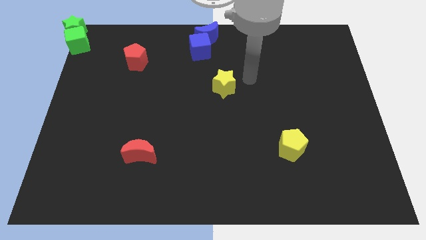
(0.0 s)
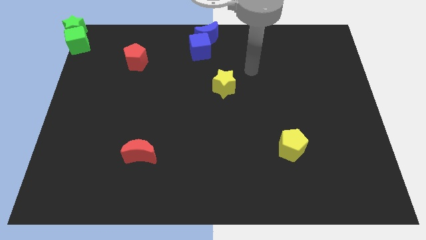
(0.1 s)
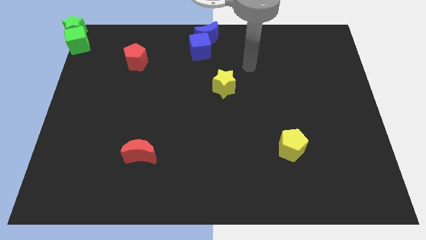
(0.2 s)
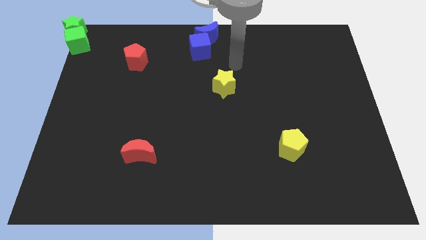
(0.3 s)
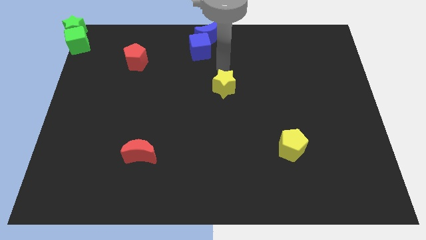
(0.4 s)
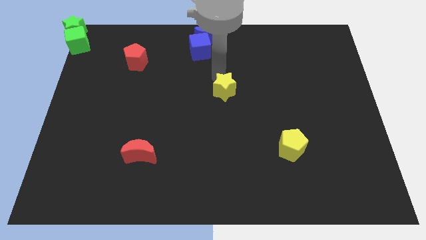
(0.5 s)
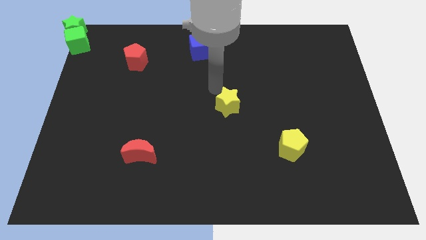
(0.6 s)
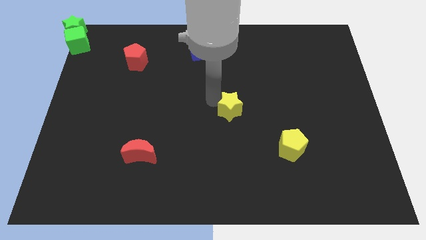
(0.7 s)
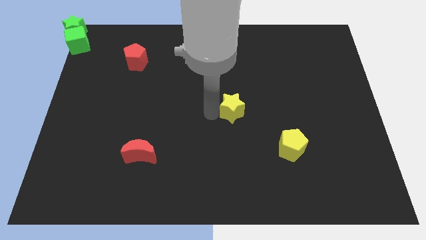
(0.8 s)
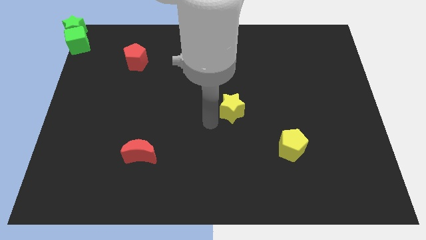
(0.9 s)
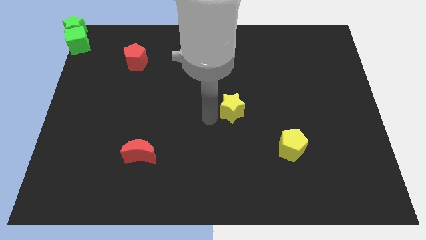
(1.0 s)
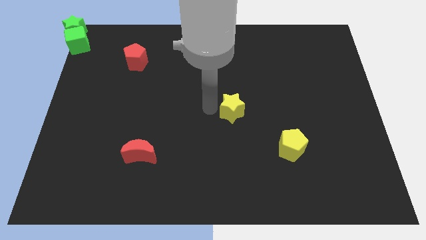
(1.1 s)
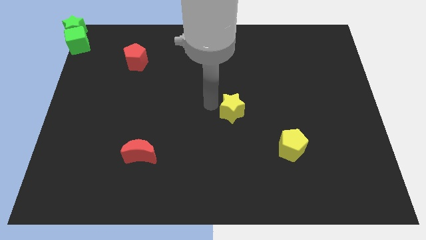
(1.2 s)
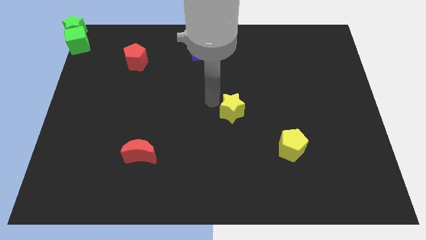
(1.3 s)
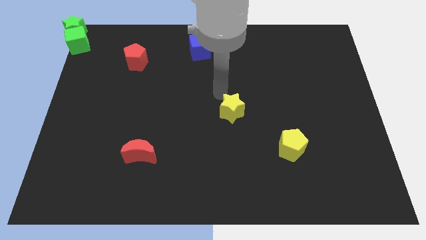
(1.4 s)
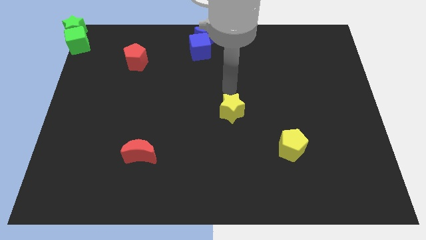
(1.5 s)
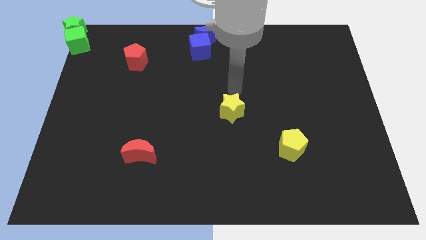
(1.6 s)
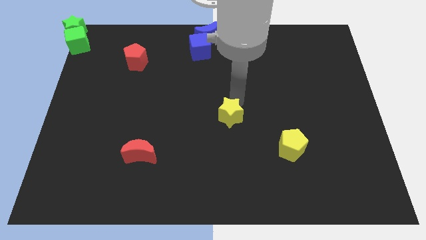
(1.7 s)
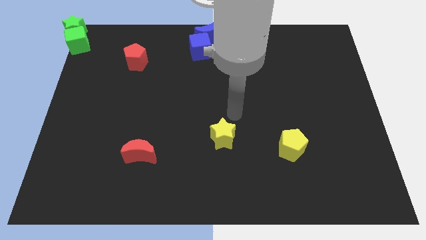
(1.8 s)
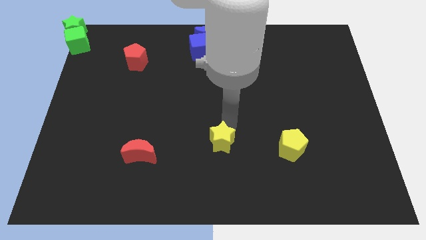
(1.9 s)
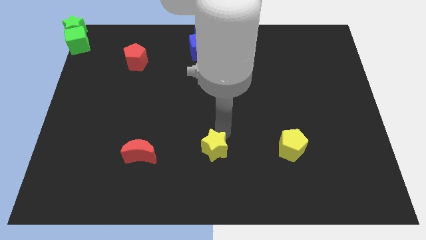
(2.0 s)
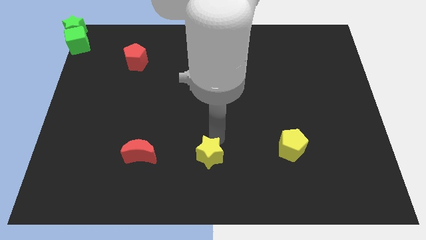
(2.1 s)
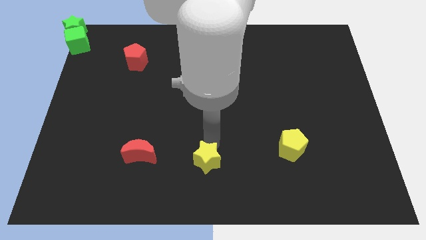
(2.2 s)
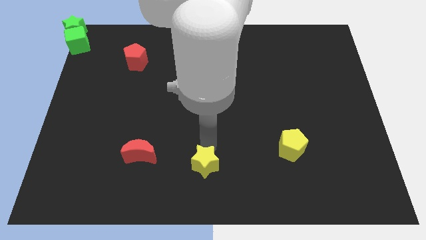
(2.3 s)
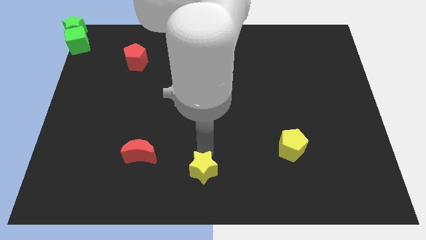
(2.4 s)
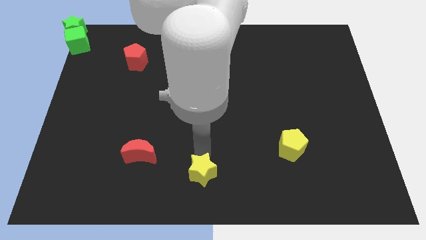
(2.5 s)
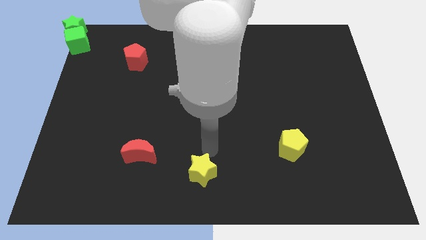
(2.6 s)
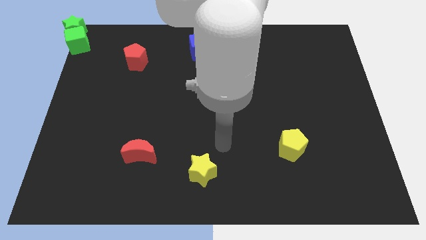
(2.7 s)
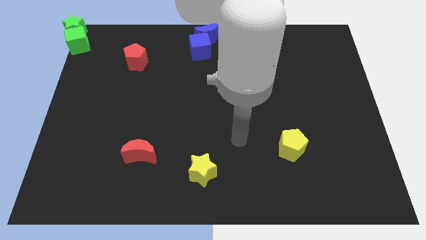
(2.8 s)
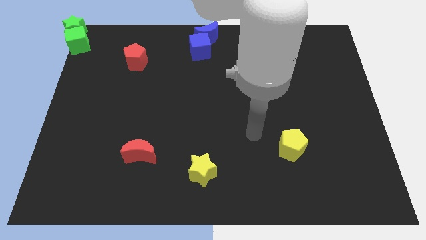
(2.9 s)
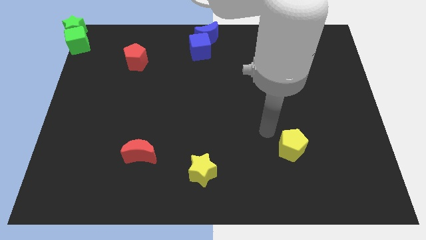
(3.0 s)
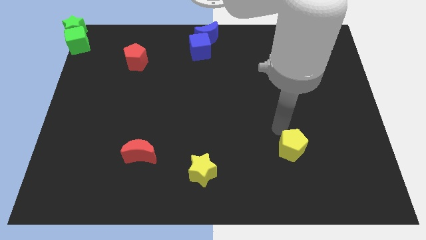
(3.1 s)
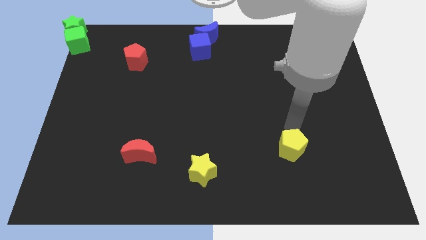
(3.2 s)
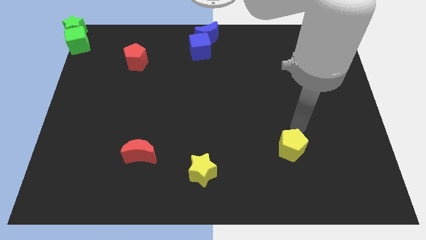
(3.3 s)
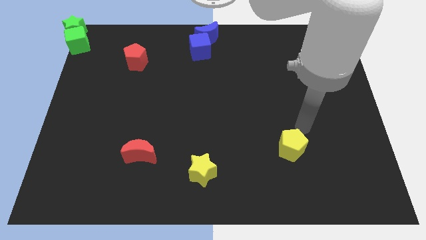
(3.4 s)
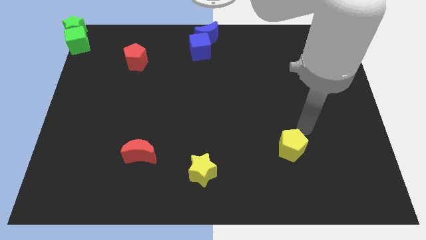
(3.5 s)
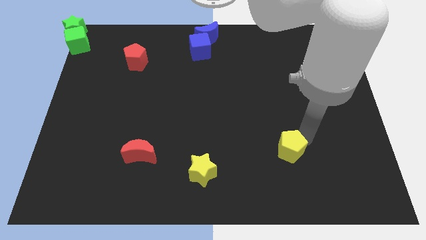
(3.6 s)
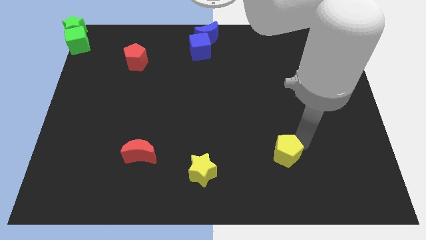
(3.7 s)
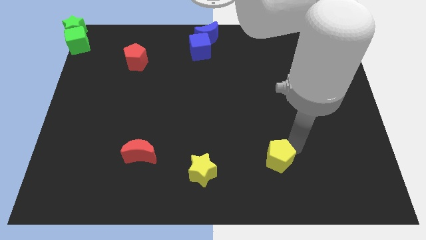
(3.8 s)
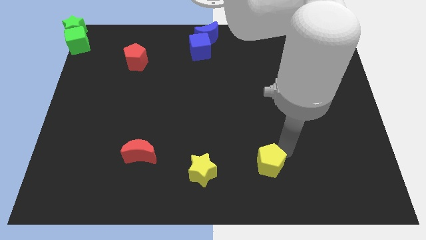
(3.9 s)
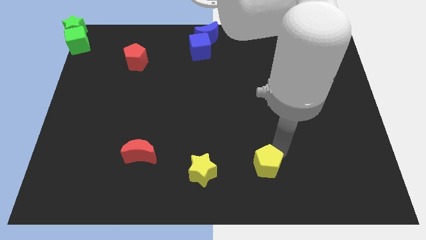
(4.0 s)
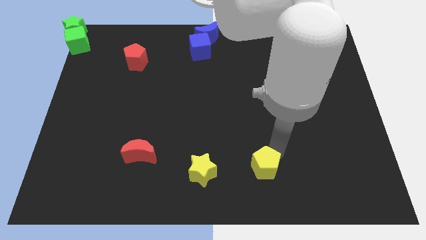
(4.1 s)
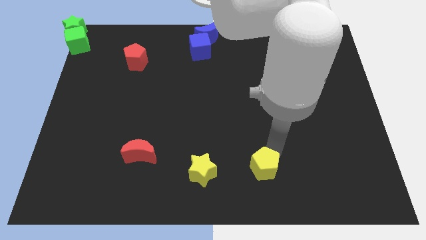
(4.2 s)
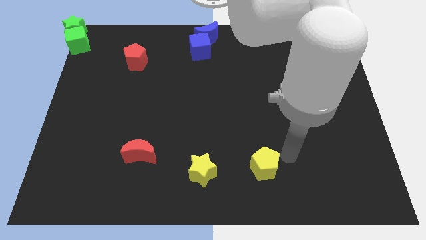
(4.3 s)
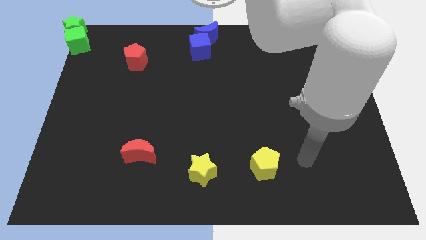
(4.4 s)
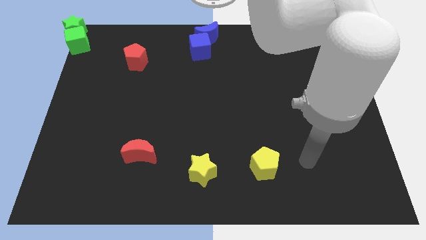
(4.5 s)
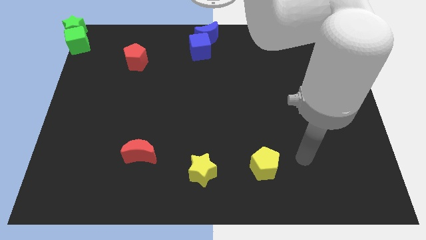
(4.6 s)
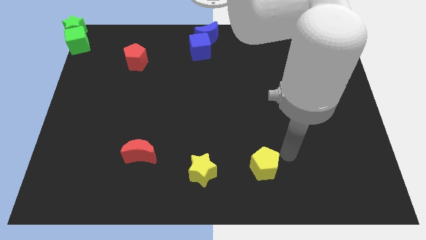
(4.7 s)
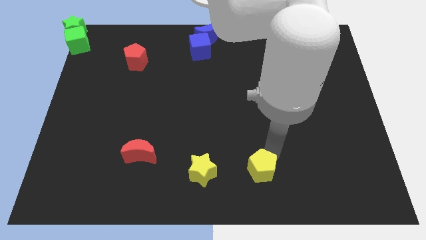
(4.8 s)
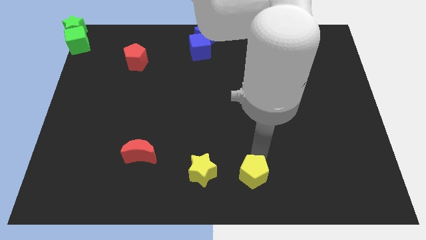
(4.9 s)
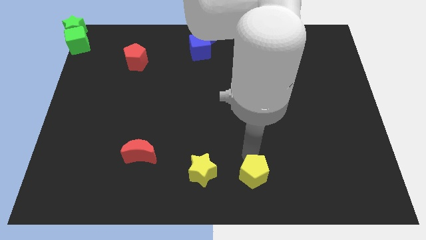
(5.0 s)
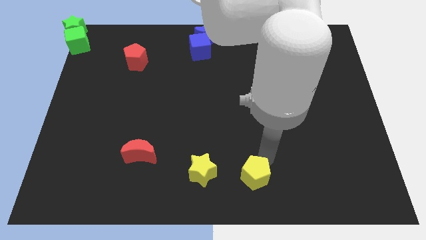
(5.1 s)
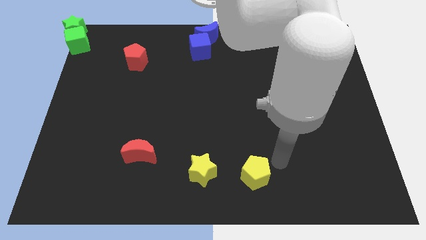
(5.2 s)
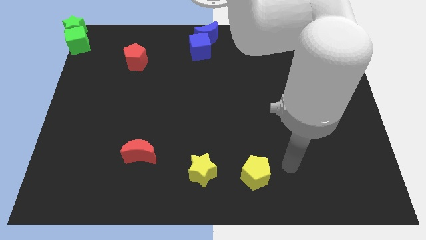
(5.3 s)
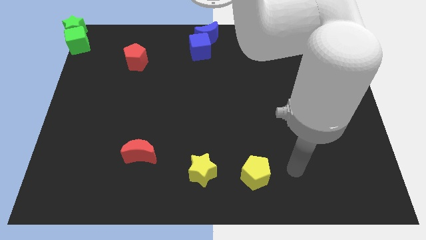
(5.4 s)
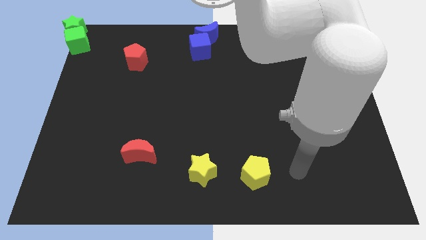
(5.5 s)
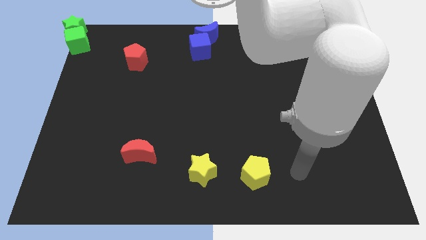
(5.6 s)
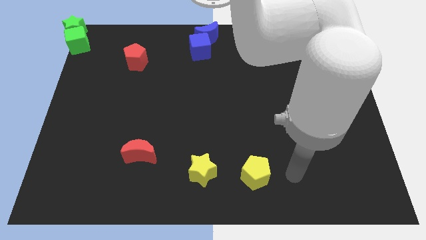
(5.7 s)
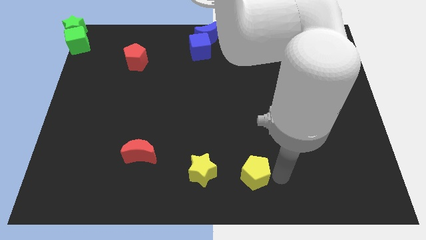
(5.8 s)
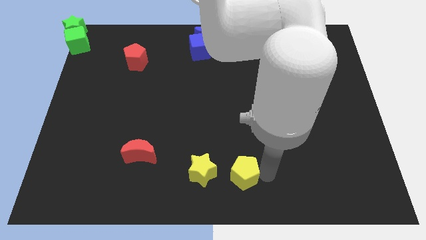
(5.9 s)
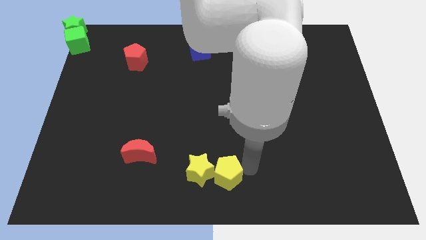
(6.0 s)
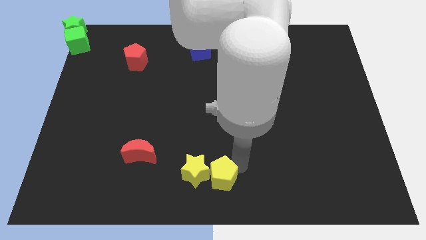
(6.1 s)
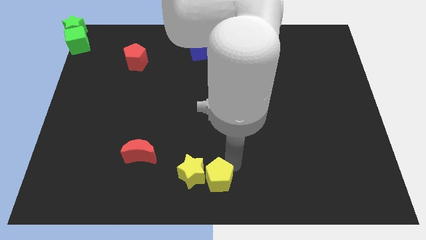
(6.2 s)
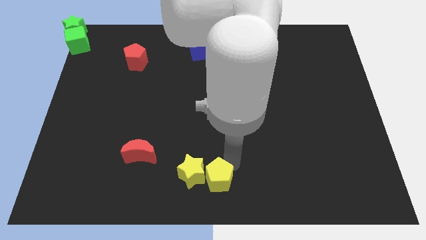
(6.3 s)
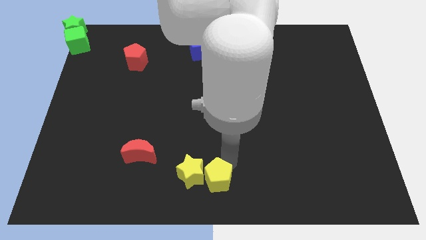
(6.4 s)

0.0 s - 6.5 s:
place the yellow pentagon close to yellow star

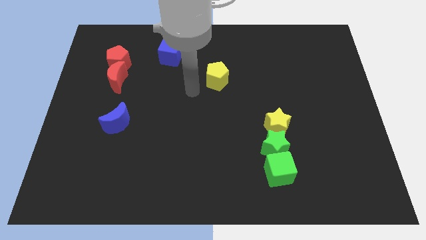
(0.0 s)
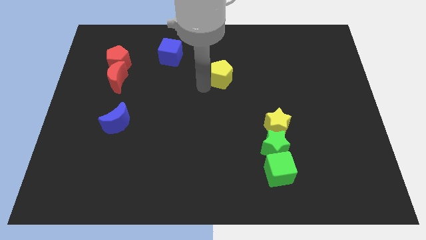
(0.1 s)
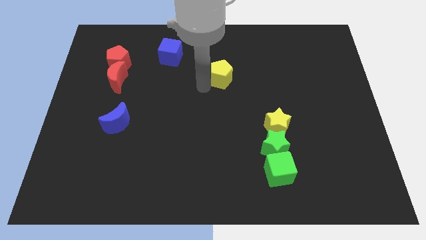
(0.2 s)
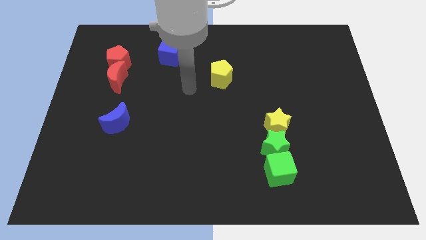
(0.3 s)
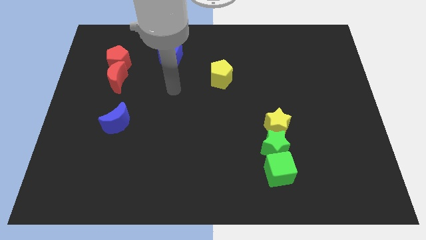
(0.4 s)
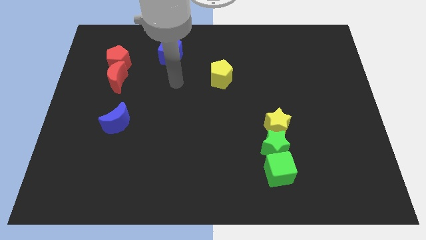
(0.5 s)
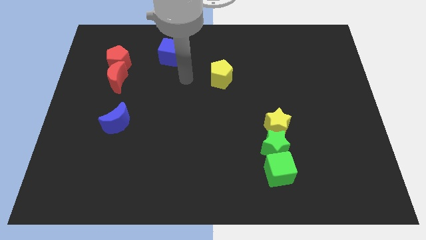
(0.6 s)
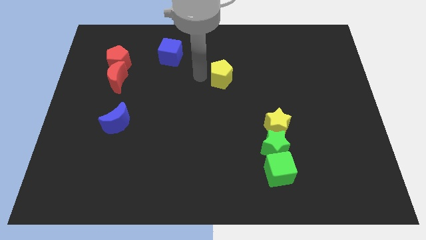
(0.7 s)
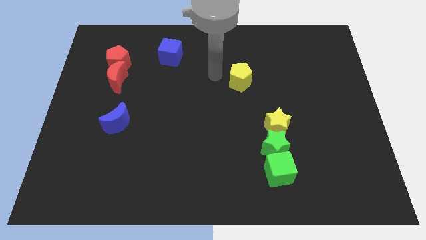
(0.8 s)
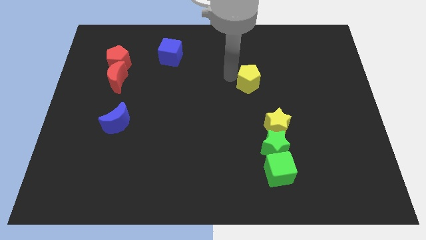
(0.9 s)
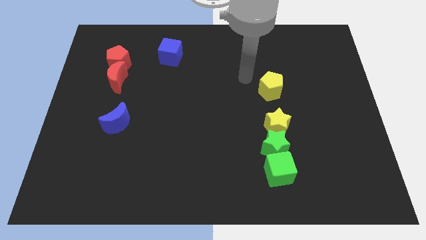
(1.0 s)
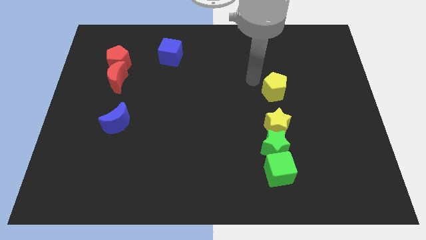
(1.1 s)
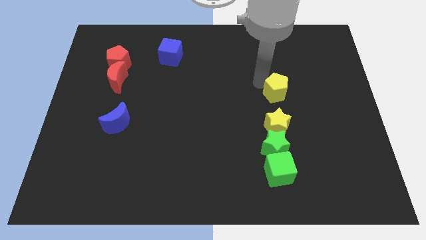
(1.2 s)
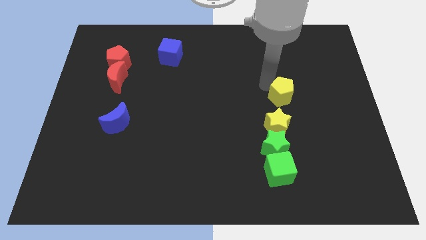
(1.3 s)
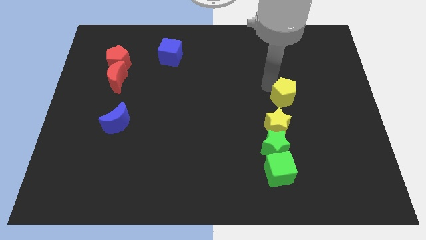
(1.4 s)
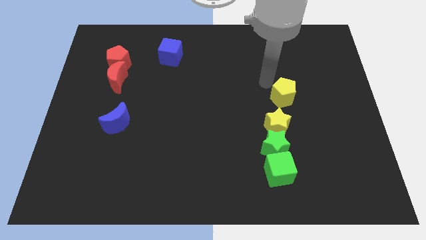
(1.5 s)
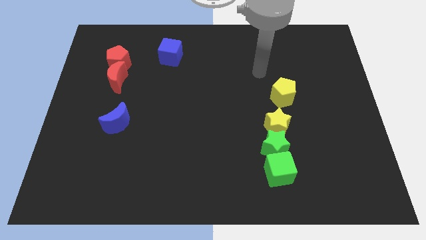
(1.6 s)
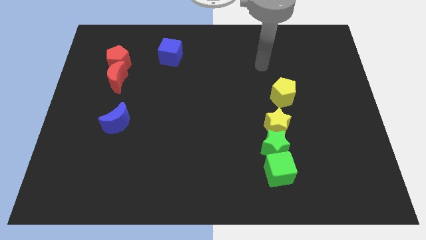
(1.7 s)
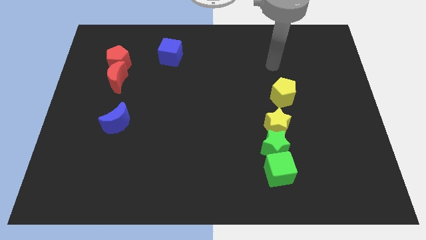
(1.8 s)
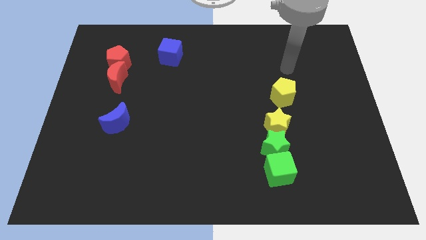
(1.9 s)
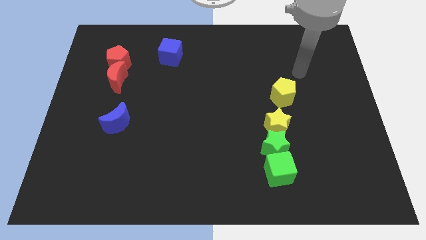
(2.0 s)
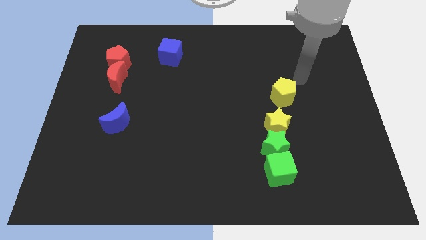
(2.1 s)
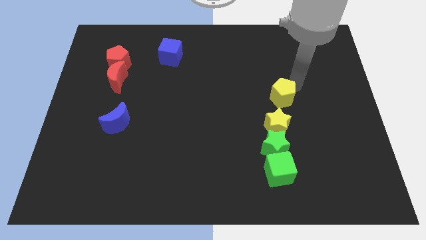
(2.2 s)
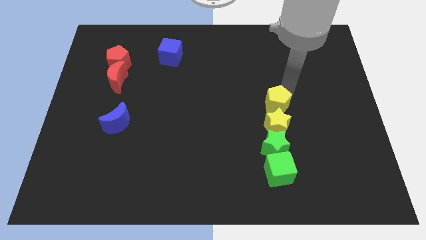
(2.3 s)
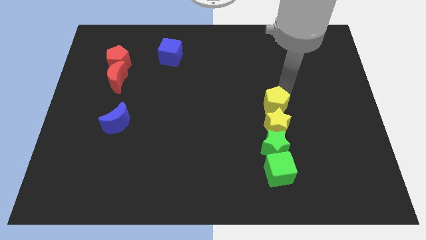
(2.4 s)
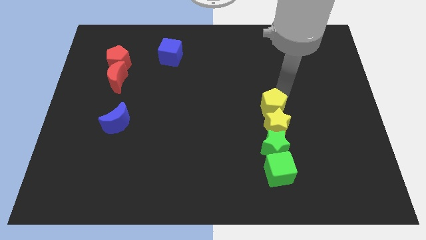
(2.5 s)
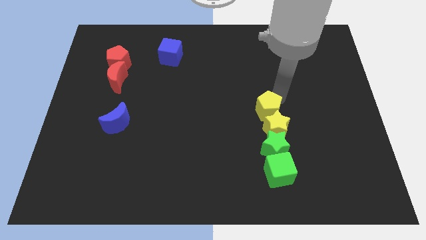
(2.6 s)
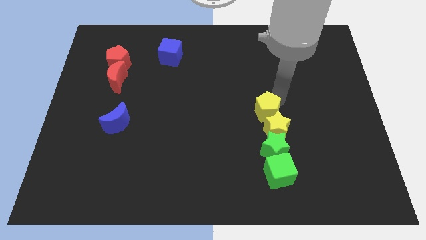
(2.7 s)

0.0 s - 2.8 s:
push the yellow pentagon into the yellow star
